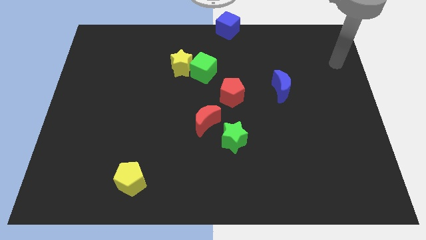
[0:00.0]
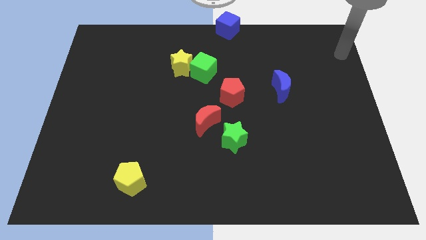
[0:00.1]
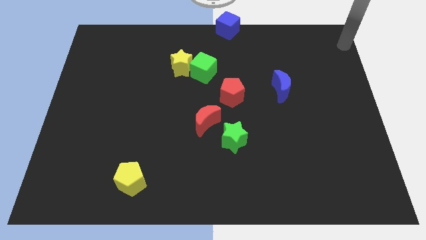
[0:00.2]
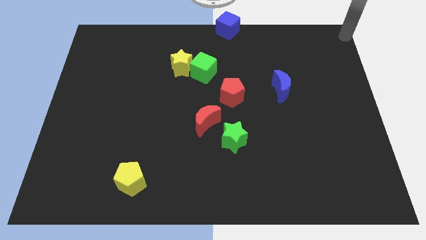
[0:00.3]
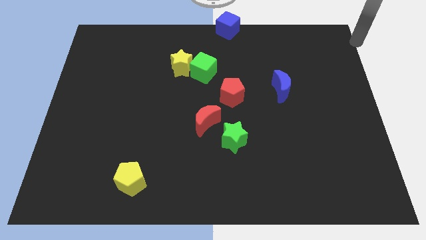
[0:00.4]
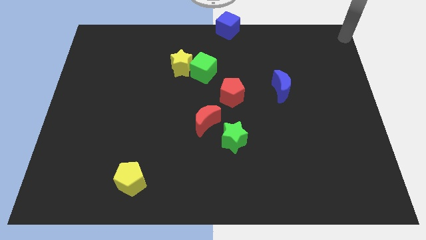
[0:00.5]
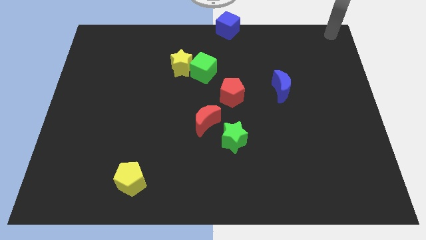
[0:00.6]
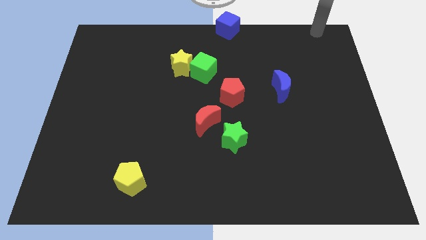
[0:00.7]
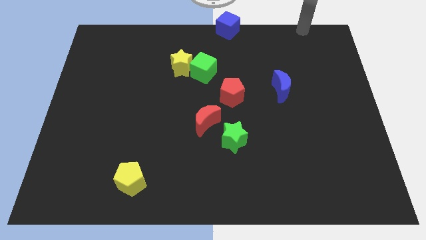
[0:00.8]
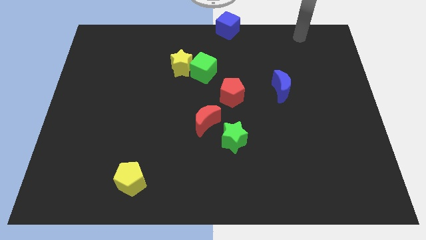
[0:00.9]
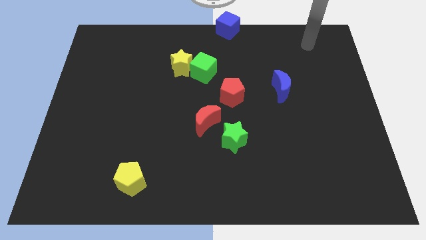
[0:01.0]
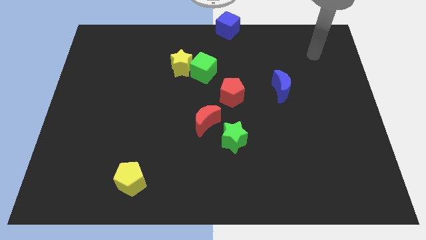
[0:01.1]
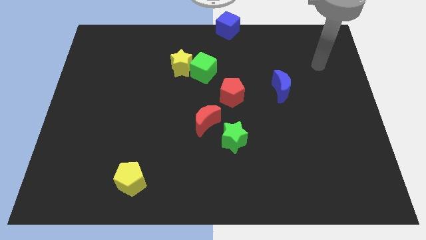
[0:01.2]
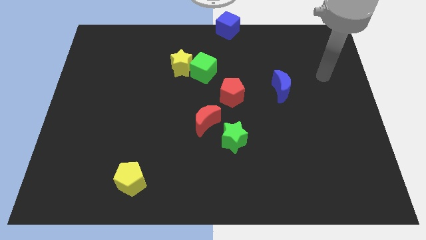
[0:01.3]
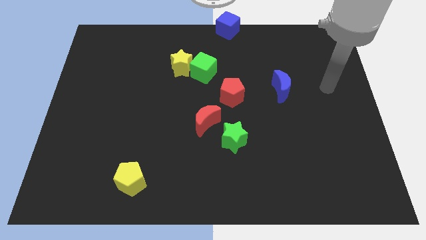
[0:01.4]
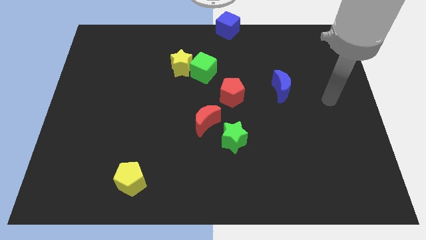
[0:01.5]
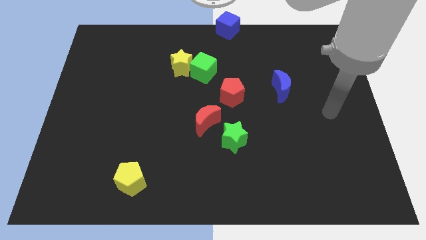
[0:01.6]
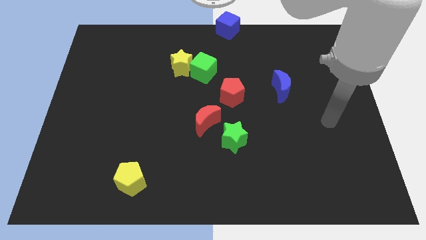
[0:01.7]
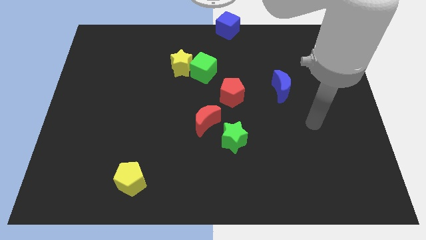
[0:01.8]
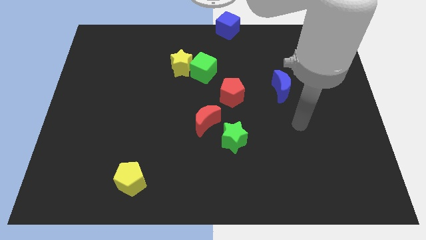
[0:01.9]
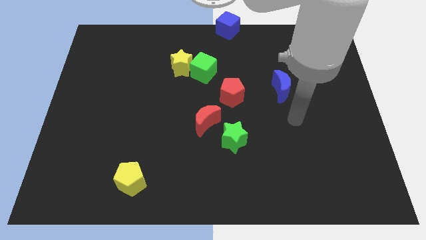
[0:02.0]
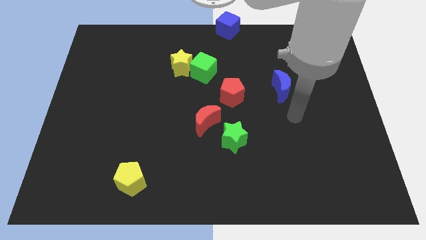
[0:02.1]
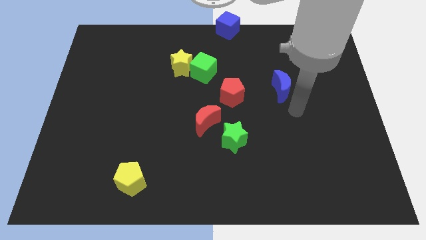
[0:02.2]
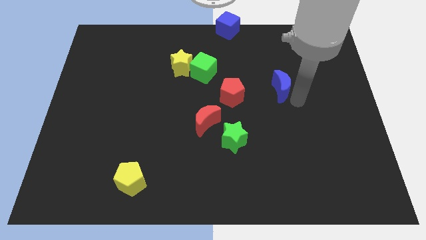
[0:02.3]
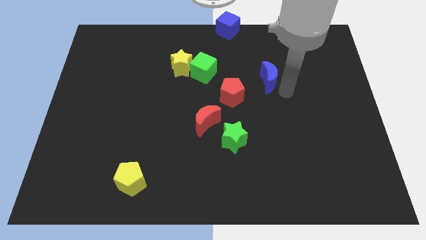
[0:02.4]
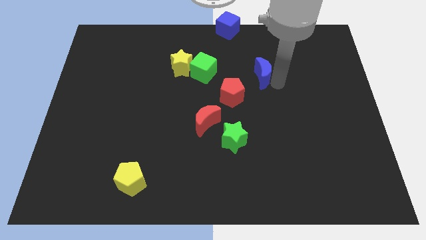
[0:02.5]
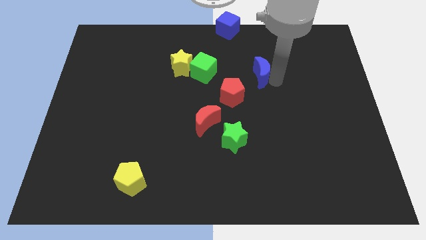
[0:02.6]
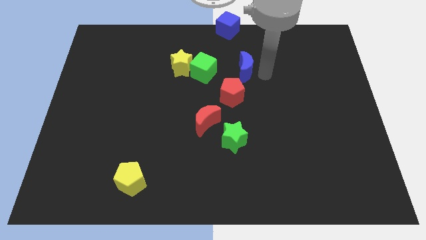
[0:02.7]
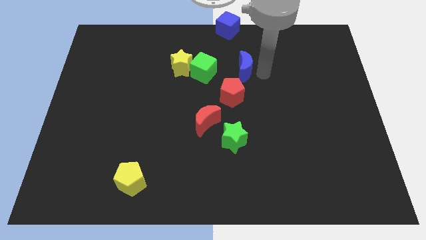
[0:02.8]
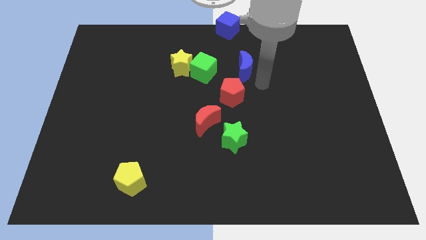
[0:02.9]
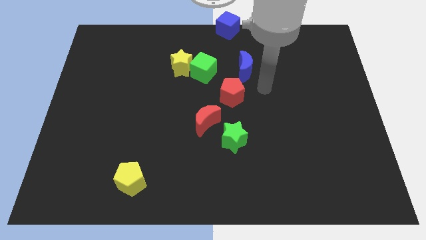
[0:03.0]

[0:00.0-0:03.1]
move blue moon towards green cube

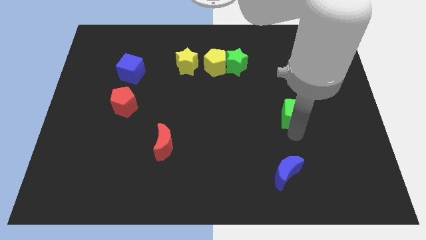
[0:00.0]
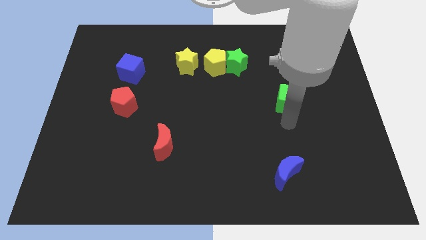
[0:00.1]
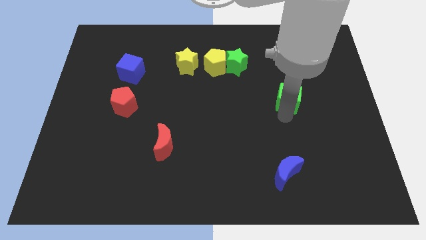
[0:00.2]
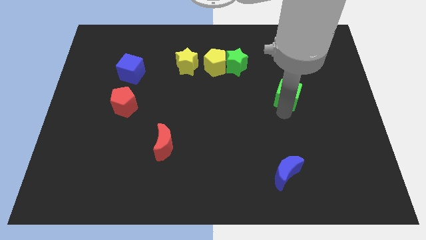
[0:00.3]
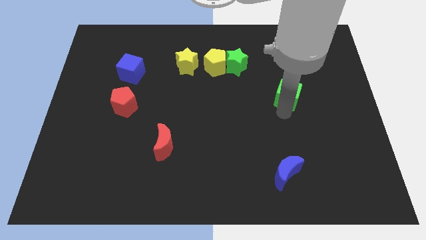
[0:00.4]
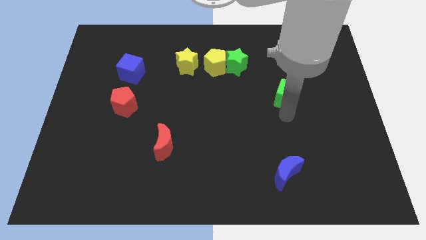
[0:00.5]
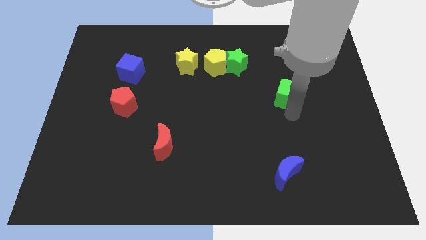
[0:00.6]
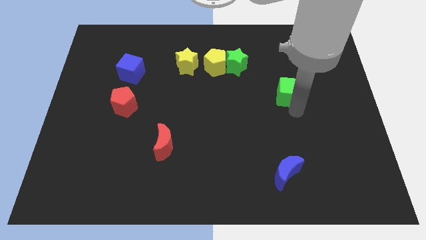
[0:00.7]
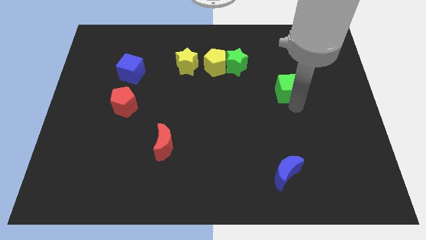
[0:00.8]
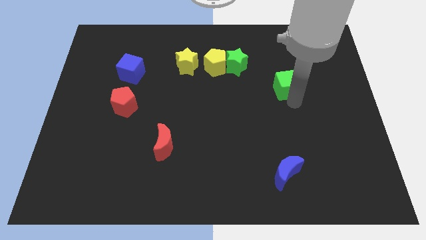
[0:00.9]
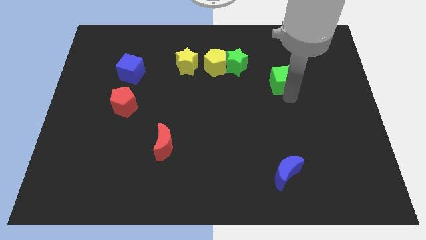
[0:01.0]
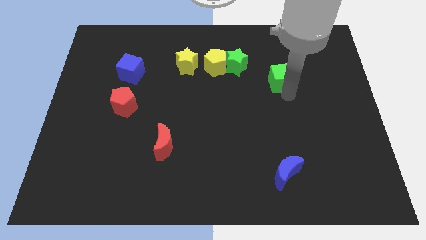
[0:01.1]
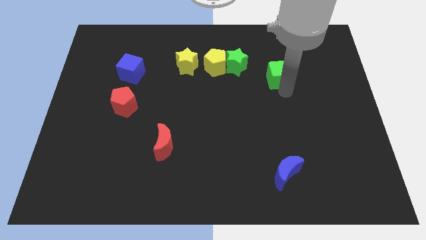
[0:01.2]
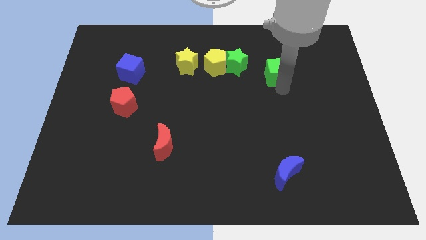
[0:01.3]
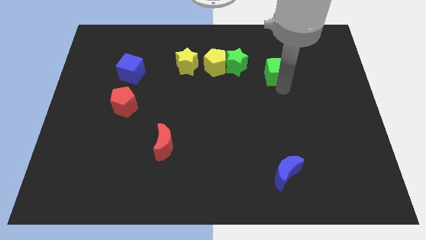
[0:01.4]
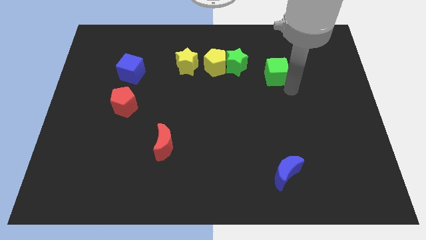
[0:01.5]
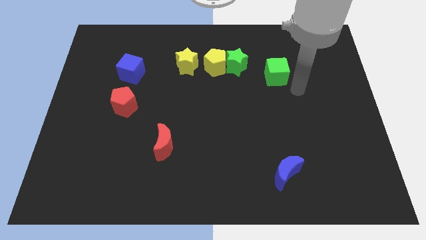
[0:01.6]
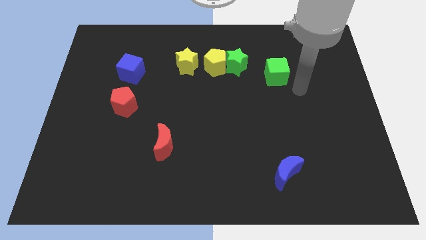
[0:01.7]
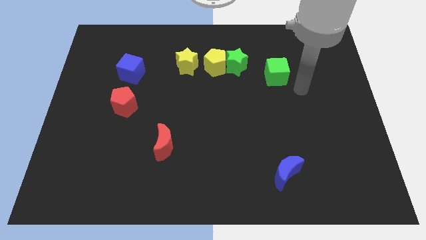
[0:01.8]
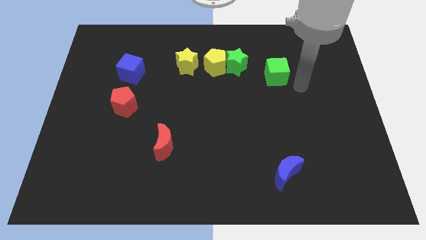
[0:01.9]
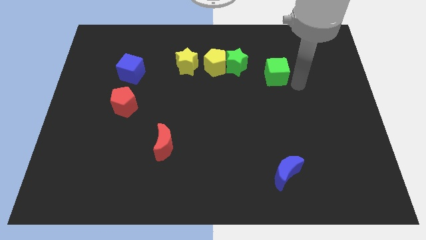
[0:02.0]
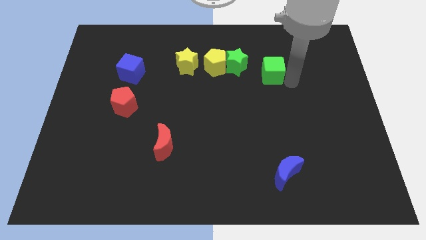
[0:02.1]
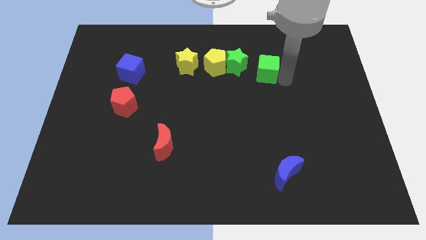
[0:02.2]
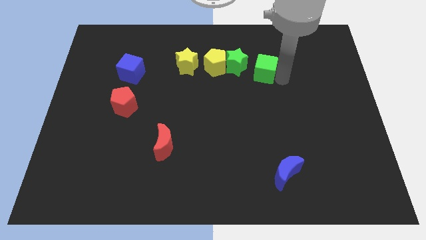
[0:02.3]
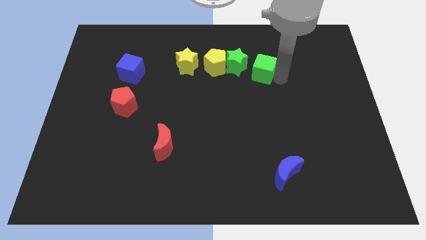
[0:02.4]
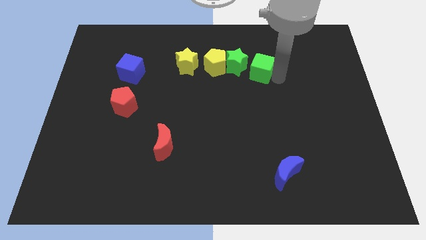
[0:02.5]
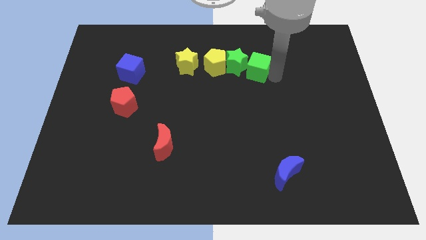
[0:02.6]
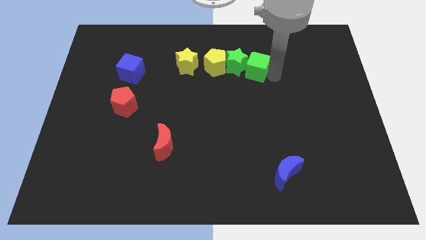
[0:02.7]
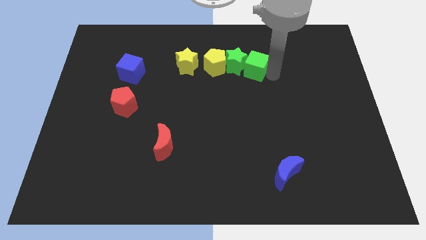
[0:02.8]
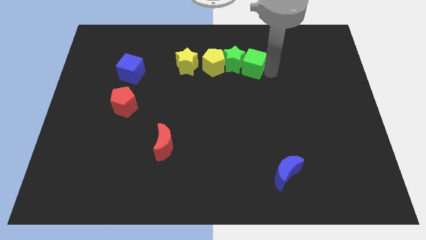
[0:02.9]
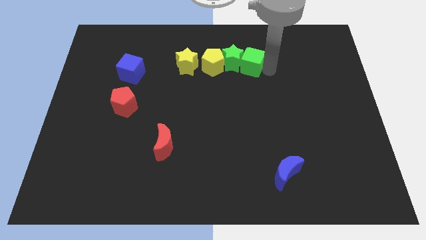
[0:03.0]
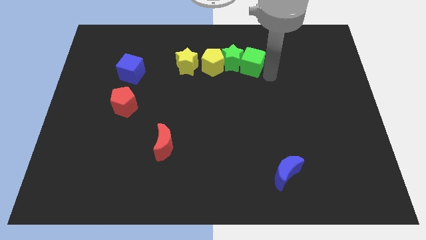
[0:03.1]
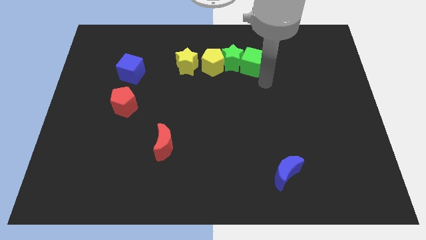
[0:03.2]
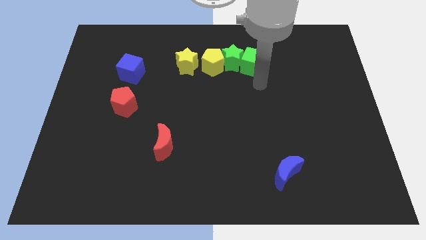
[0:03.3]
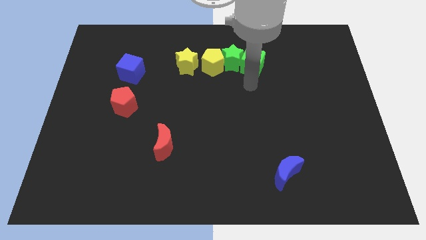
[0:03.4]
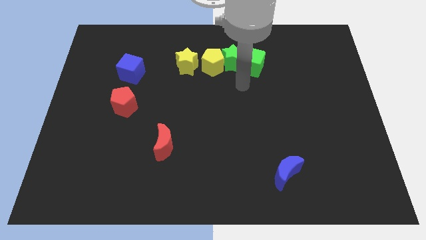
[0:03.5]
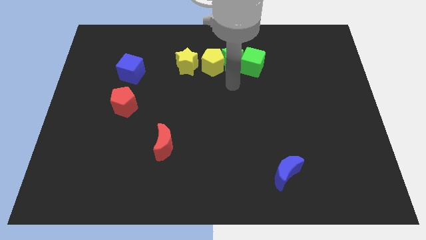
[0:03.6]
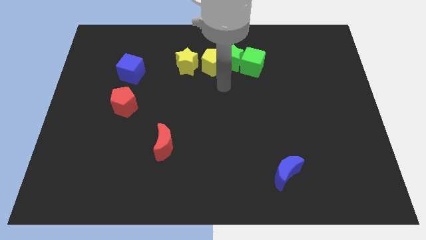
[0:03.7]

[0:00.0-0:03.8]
push green cube in to green star

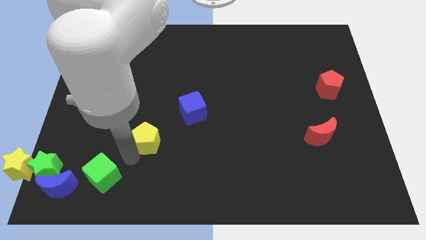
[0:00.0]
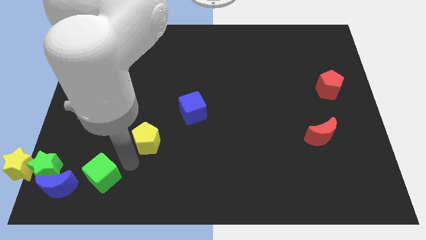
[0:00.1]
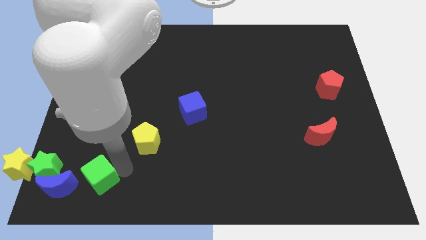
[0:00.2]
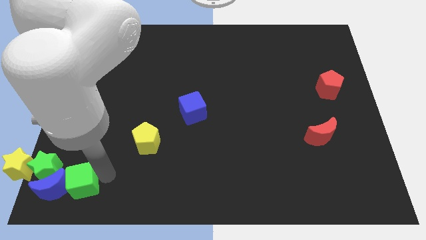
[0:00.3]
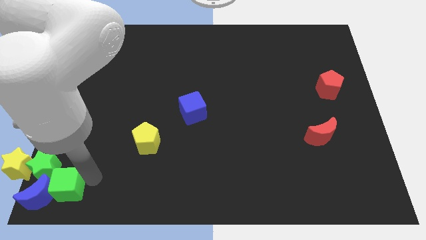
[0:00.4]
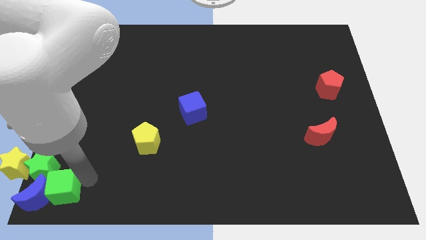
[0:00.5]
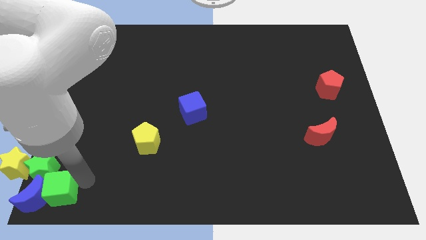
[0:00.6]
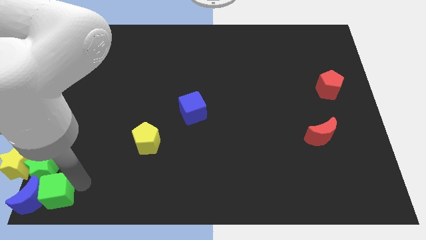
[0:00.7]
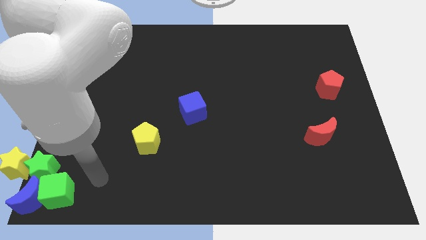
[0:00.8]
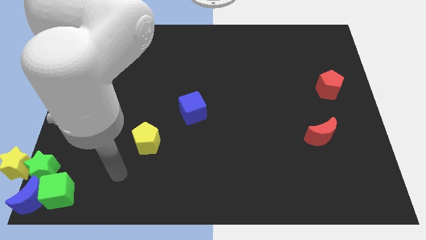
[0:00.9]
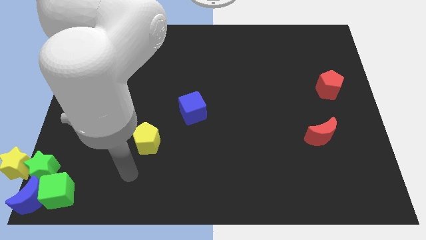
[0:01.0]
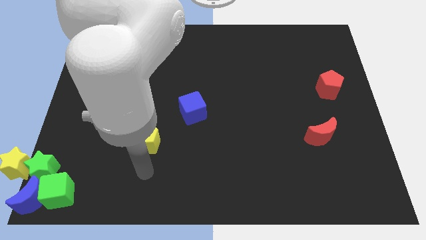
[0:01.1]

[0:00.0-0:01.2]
push the green cube into the blue moon and the green star

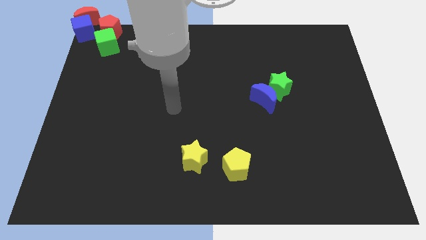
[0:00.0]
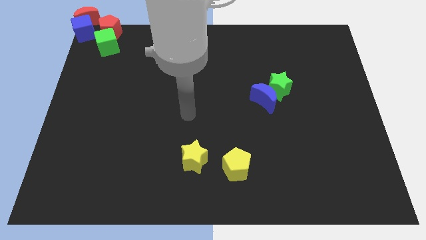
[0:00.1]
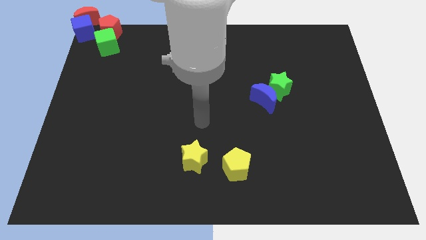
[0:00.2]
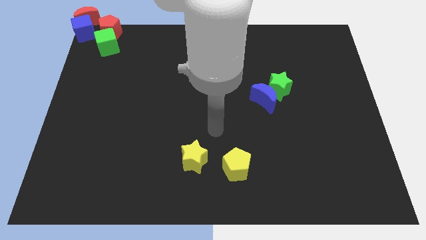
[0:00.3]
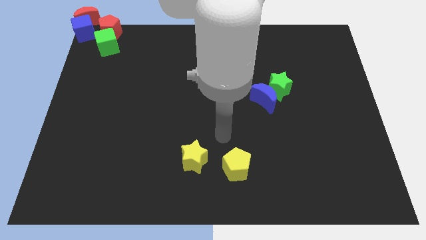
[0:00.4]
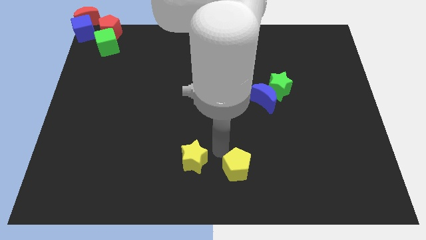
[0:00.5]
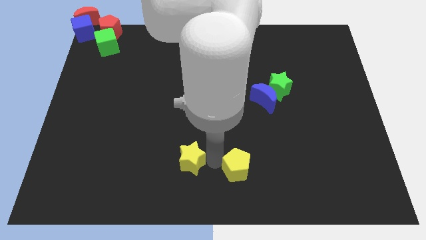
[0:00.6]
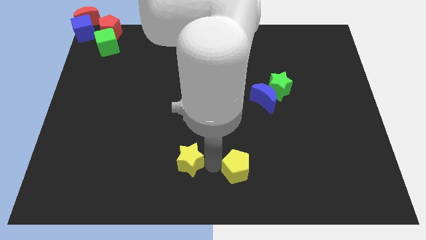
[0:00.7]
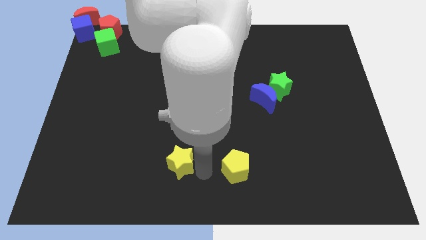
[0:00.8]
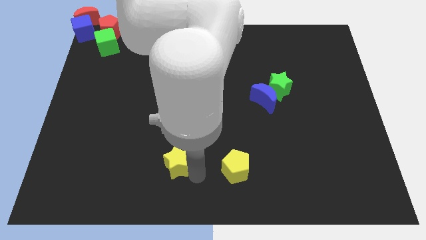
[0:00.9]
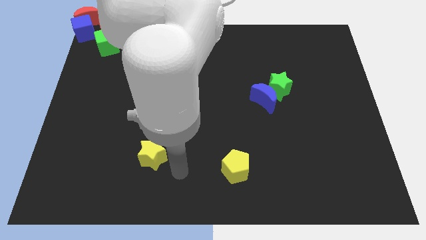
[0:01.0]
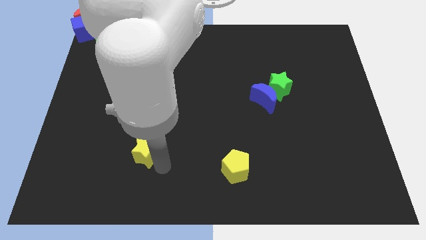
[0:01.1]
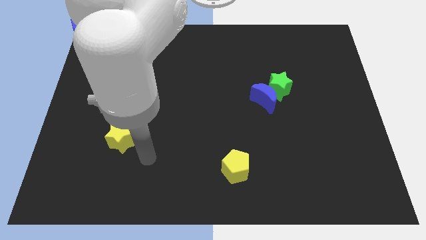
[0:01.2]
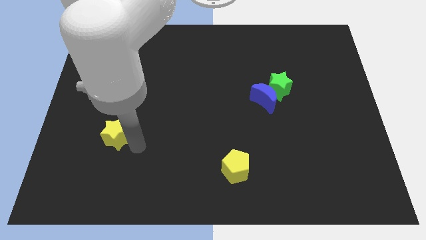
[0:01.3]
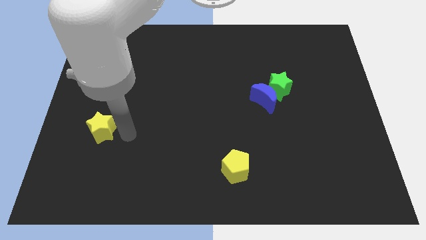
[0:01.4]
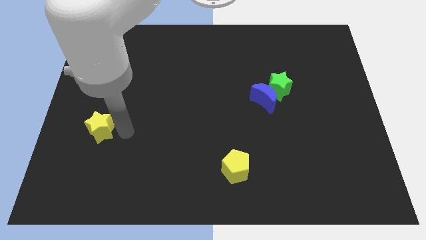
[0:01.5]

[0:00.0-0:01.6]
move the yellow star away from the yellow pentagon
